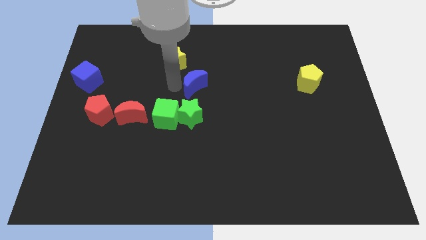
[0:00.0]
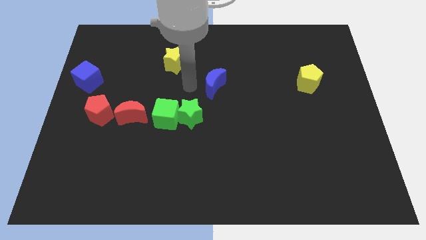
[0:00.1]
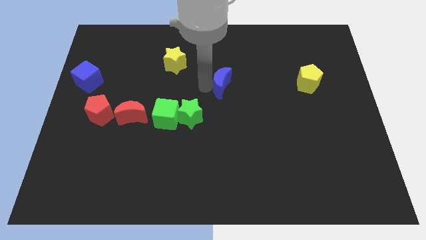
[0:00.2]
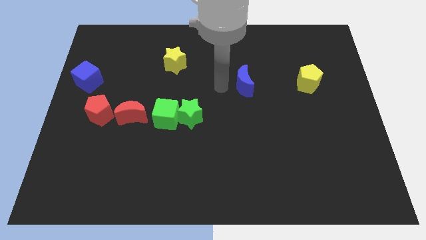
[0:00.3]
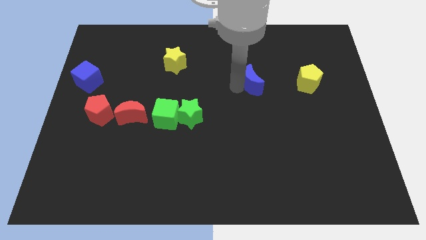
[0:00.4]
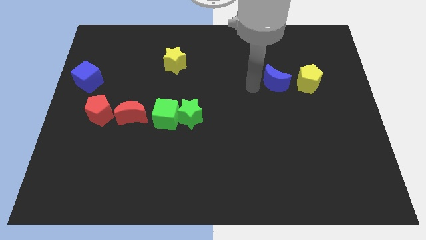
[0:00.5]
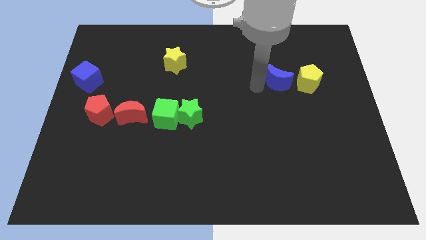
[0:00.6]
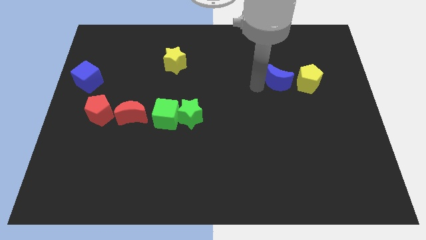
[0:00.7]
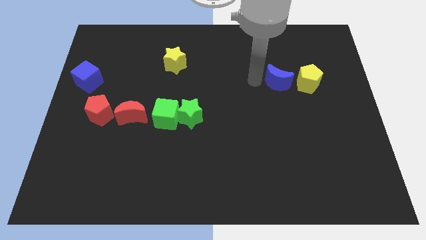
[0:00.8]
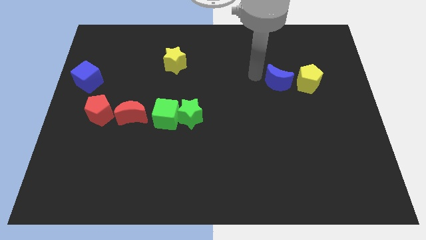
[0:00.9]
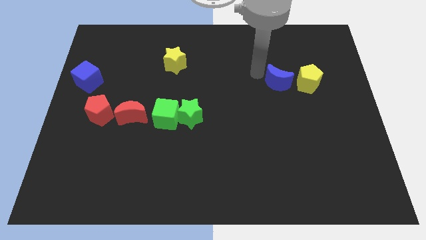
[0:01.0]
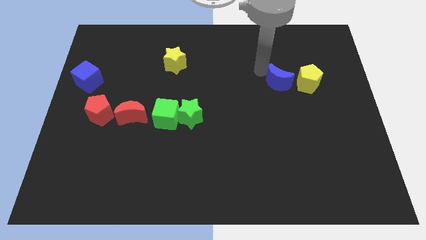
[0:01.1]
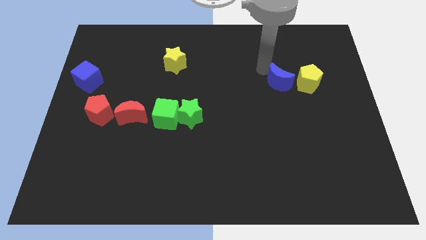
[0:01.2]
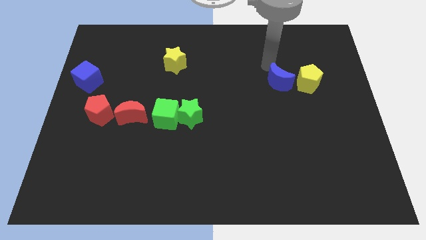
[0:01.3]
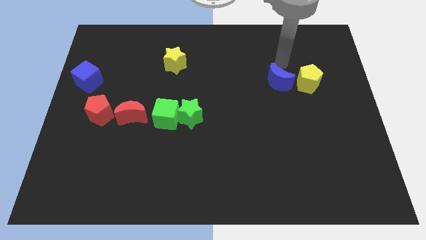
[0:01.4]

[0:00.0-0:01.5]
place blue crescent beside yellow pentagon

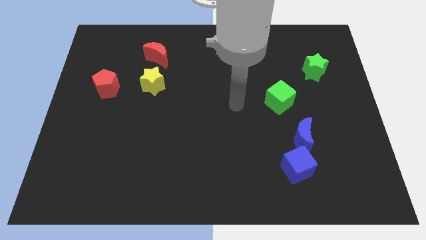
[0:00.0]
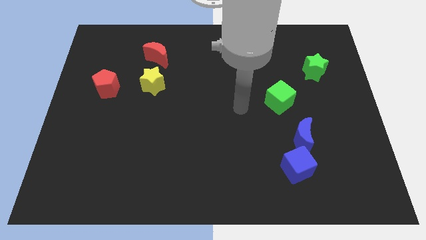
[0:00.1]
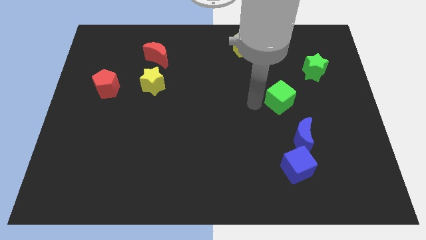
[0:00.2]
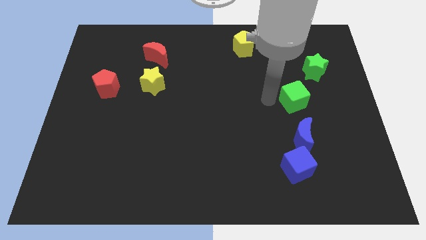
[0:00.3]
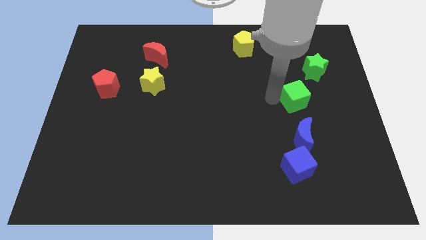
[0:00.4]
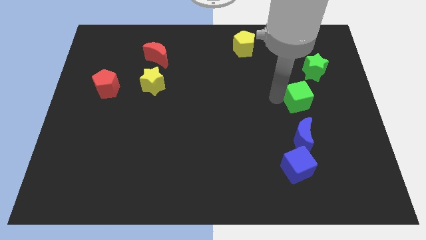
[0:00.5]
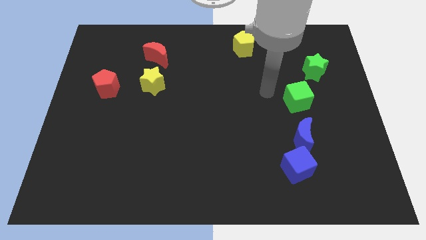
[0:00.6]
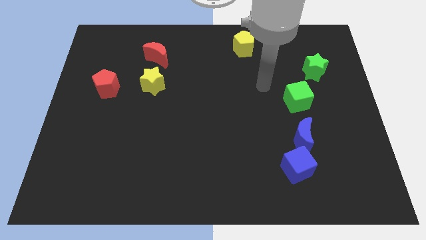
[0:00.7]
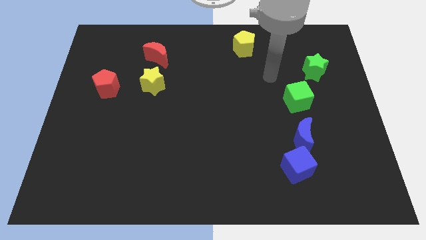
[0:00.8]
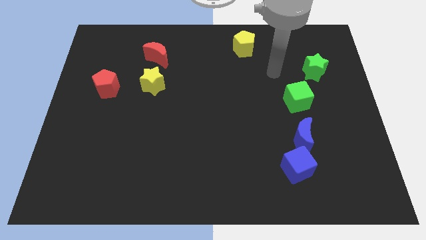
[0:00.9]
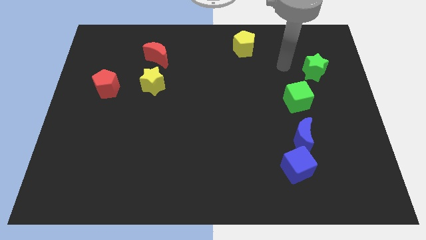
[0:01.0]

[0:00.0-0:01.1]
place the green cube in between green star and blue crescent

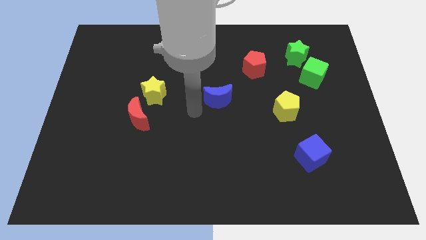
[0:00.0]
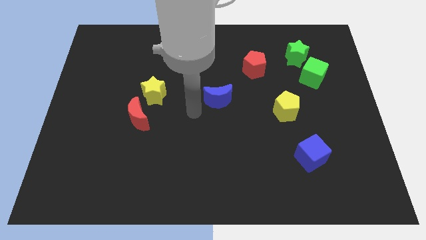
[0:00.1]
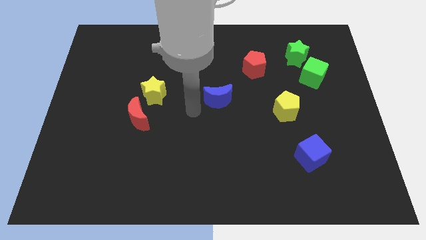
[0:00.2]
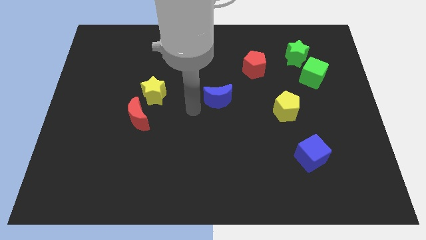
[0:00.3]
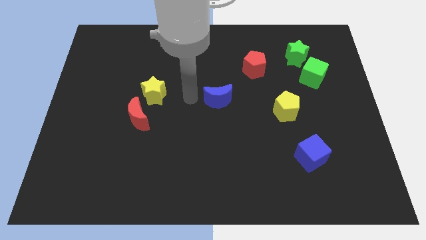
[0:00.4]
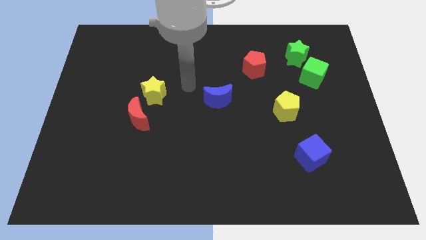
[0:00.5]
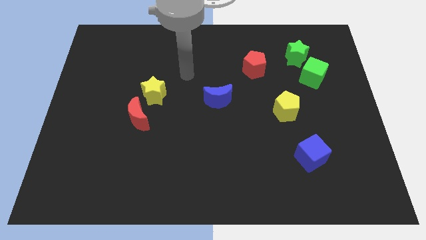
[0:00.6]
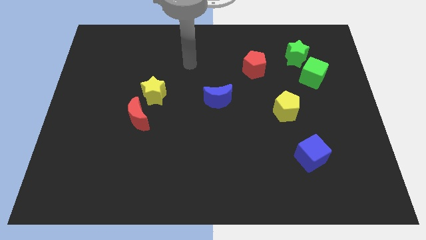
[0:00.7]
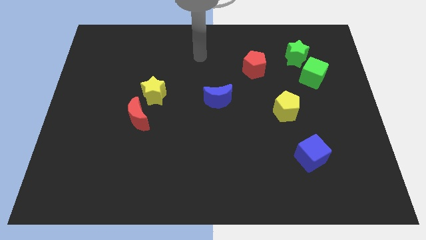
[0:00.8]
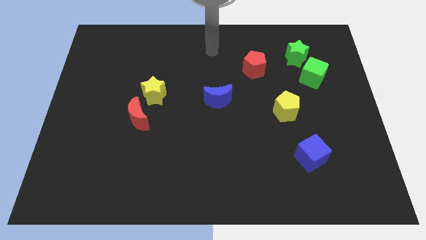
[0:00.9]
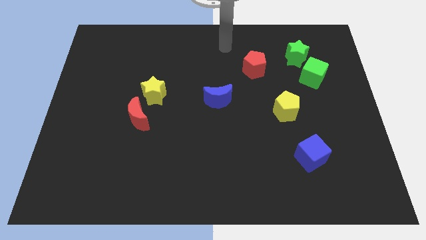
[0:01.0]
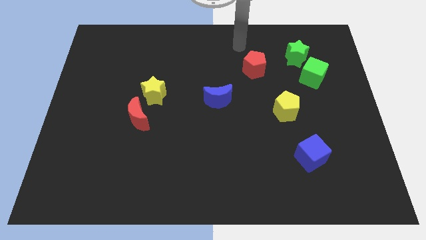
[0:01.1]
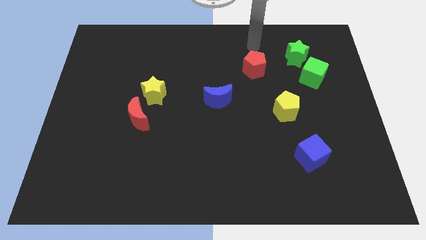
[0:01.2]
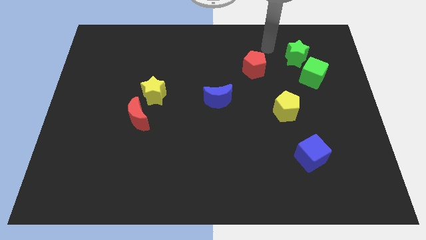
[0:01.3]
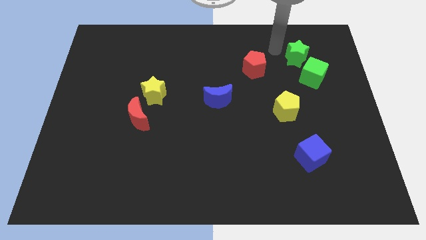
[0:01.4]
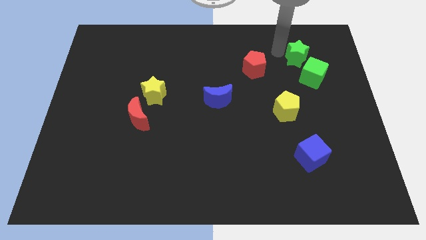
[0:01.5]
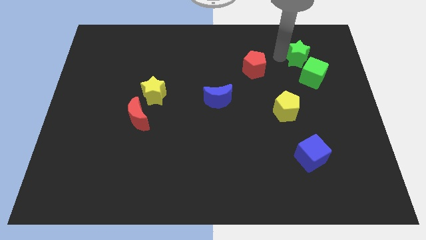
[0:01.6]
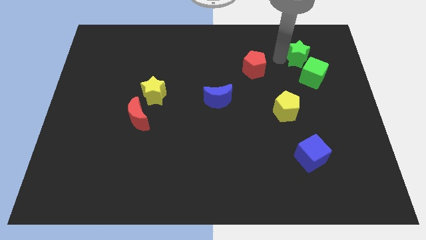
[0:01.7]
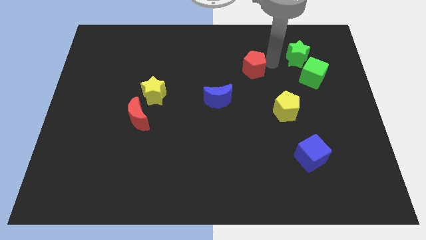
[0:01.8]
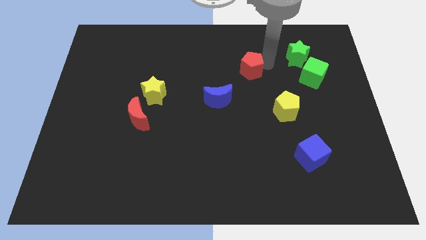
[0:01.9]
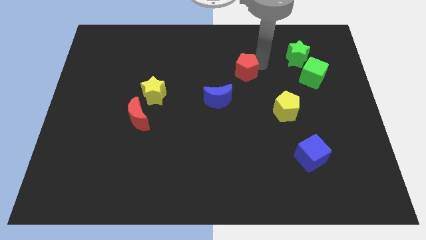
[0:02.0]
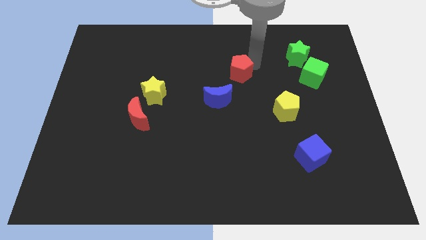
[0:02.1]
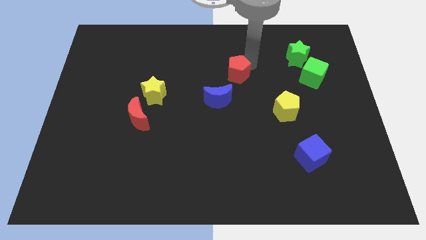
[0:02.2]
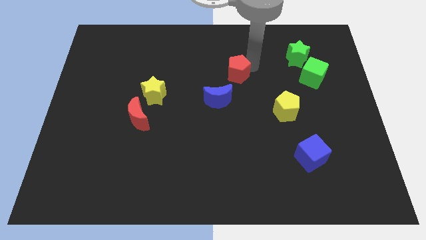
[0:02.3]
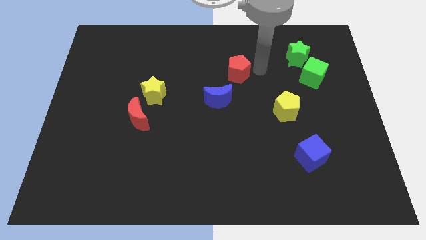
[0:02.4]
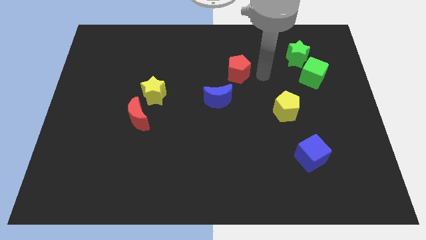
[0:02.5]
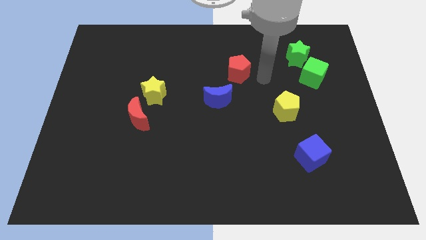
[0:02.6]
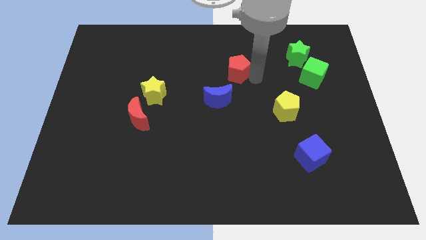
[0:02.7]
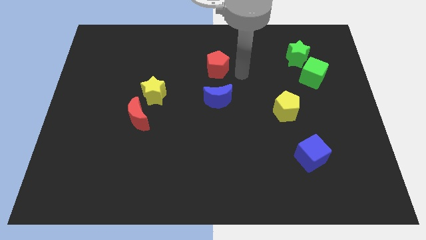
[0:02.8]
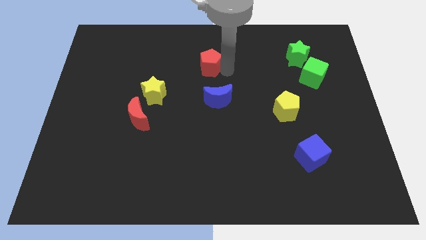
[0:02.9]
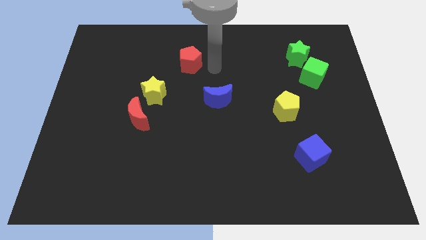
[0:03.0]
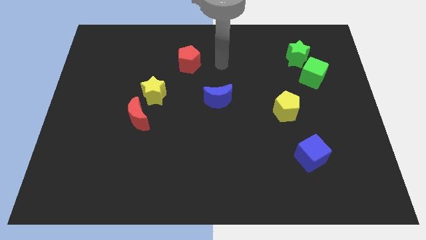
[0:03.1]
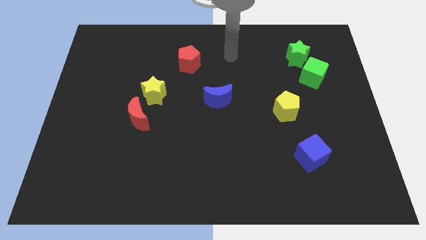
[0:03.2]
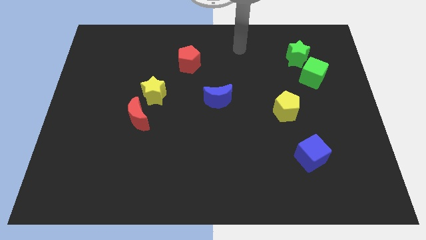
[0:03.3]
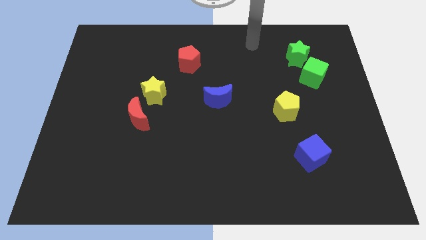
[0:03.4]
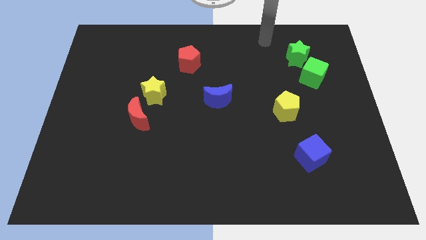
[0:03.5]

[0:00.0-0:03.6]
move the red pentagon and make a triangle with yellow star and blue moon

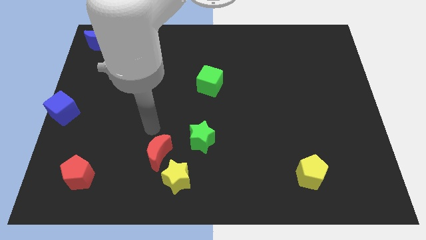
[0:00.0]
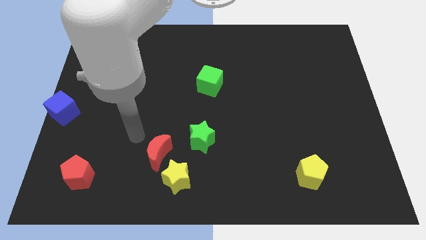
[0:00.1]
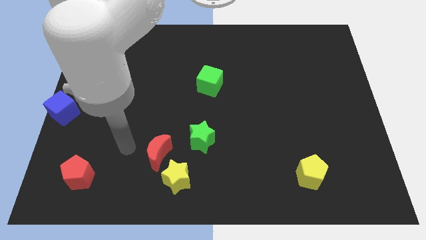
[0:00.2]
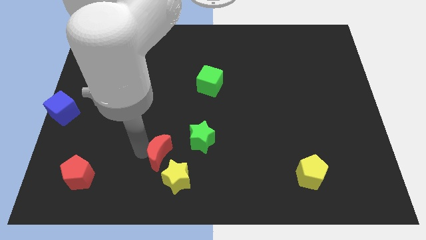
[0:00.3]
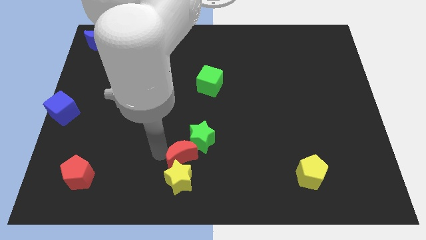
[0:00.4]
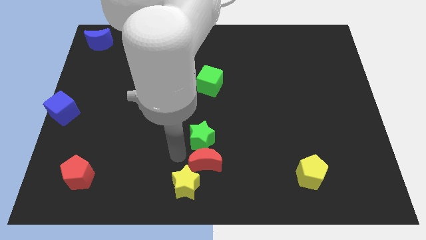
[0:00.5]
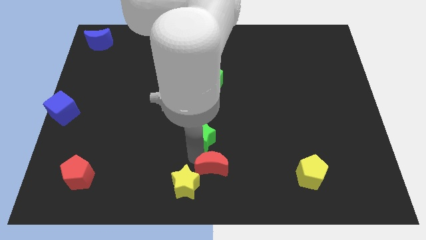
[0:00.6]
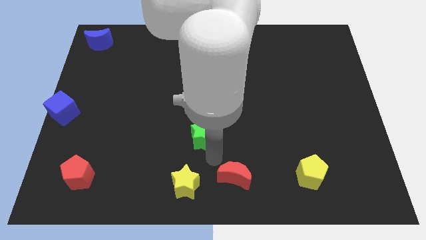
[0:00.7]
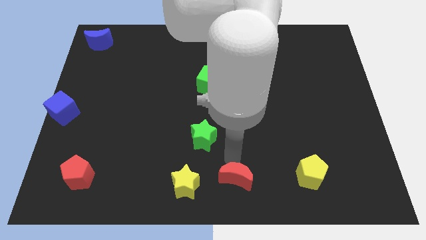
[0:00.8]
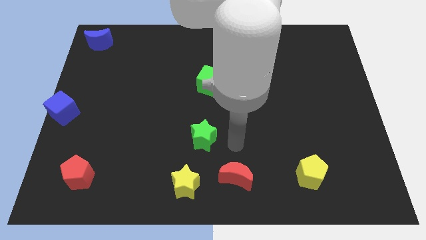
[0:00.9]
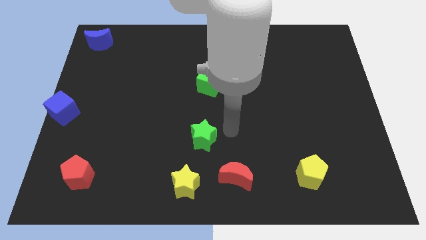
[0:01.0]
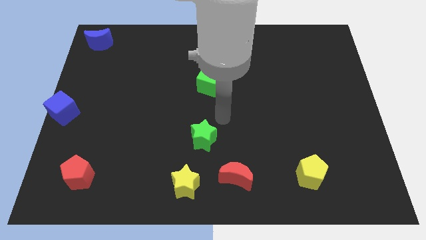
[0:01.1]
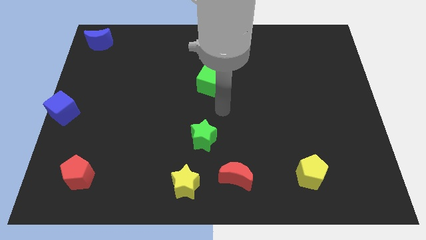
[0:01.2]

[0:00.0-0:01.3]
place red moon to the right of yellow star

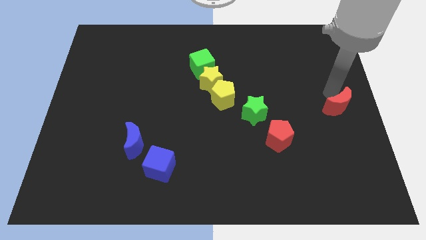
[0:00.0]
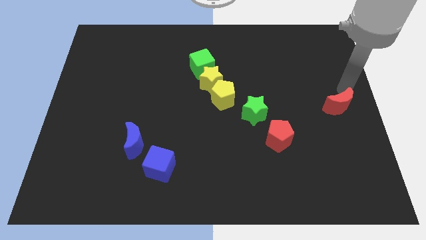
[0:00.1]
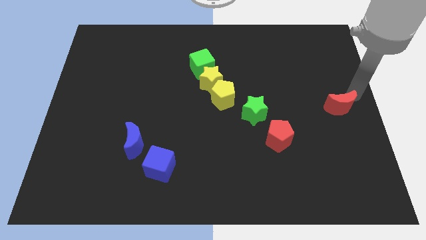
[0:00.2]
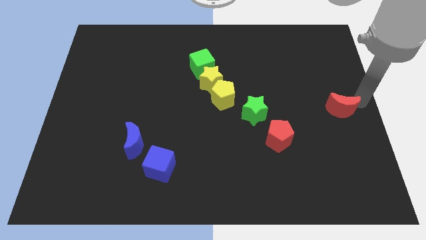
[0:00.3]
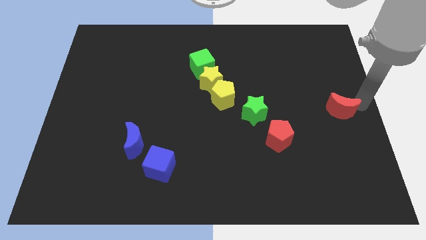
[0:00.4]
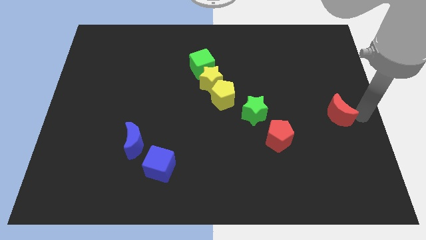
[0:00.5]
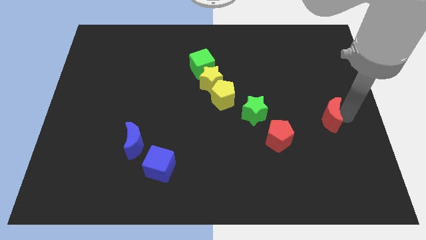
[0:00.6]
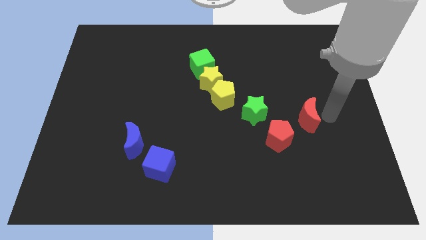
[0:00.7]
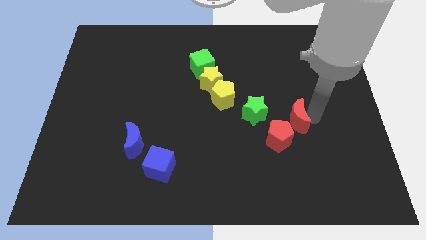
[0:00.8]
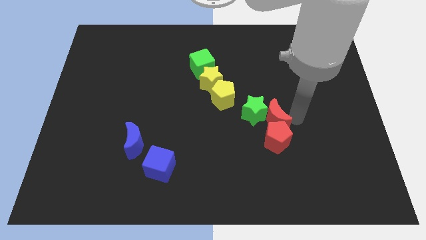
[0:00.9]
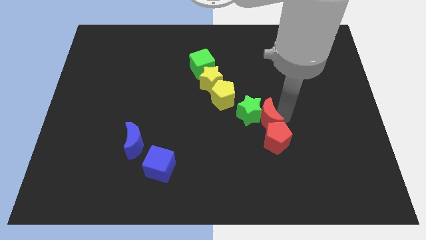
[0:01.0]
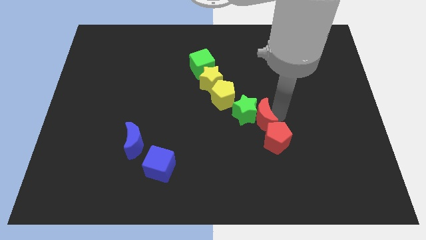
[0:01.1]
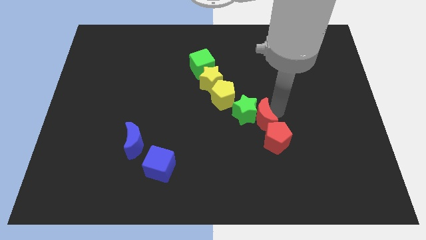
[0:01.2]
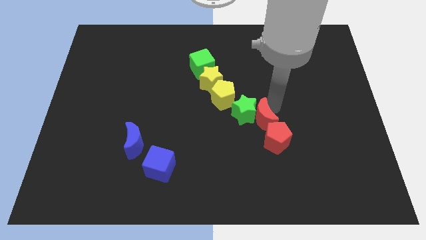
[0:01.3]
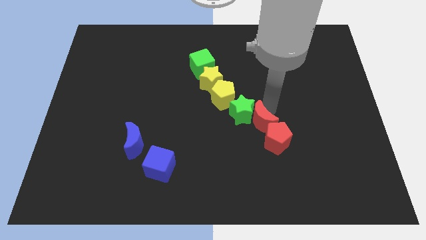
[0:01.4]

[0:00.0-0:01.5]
put red moon into the green star
